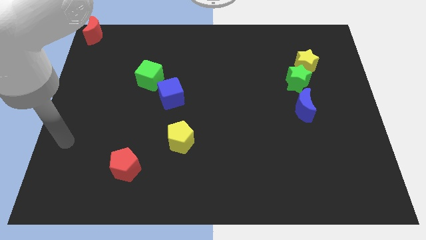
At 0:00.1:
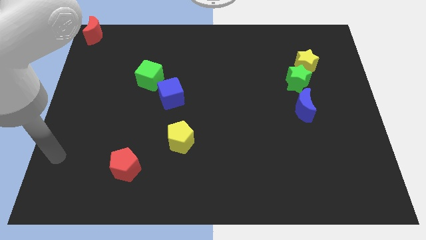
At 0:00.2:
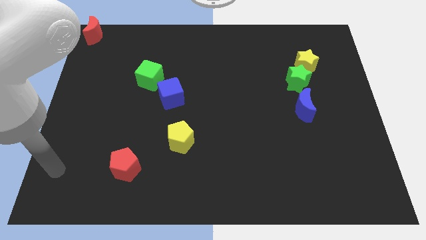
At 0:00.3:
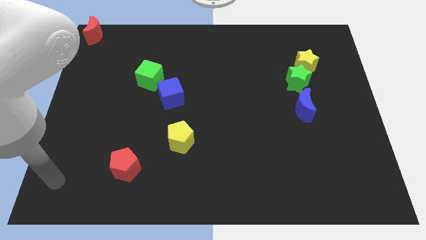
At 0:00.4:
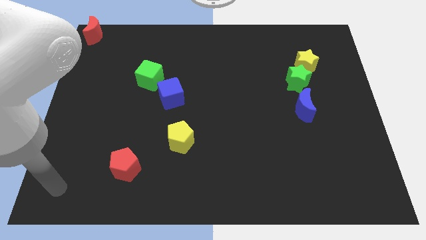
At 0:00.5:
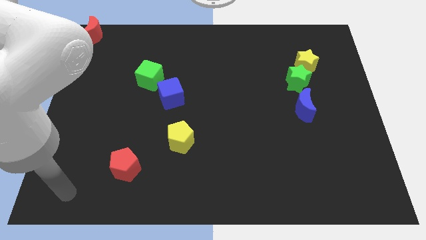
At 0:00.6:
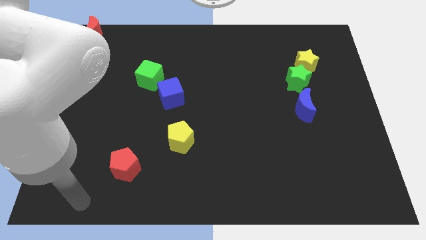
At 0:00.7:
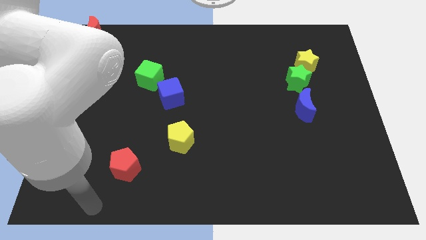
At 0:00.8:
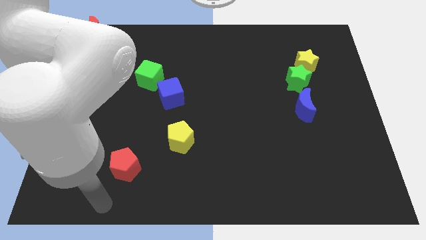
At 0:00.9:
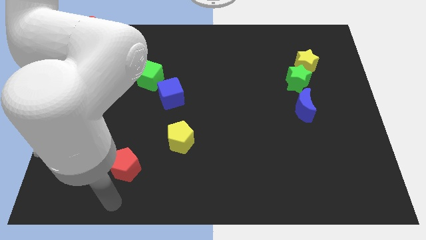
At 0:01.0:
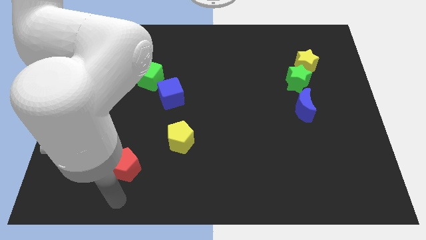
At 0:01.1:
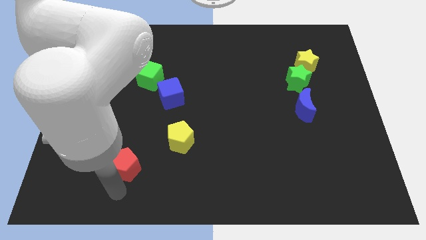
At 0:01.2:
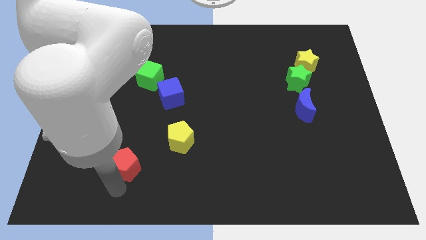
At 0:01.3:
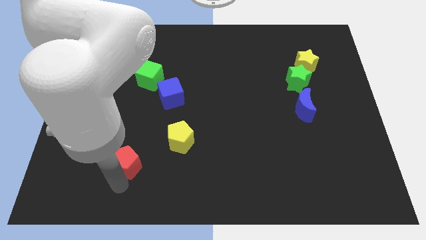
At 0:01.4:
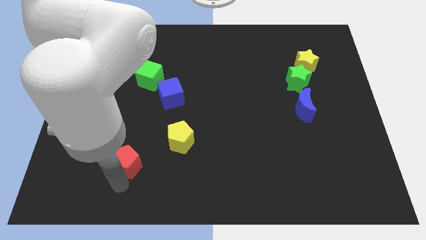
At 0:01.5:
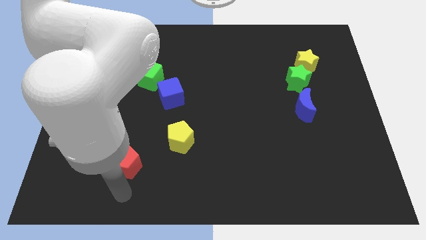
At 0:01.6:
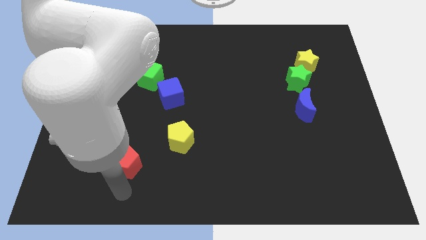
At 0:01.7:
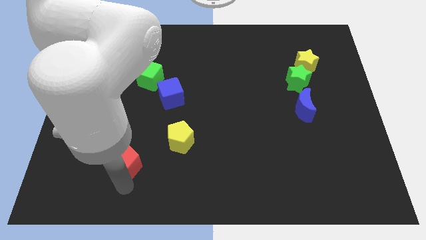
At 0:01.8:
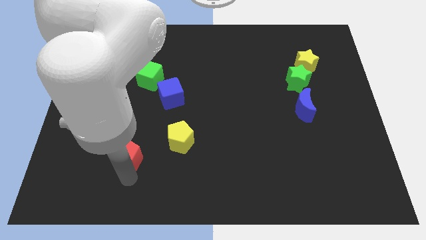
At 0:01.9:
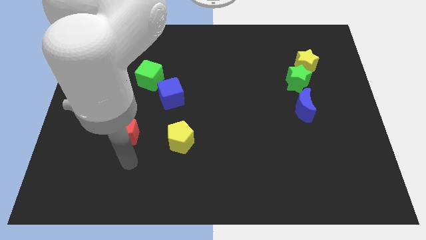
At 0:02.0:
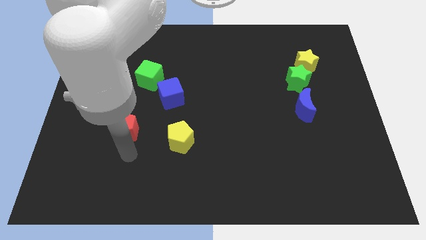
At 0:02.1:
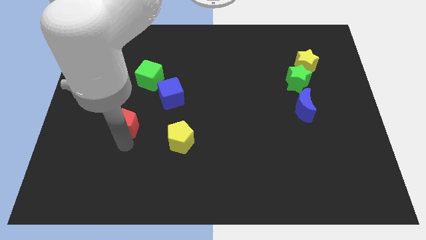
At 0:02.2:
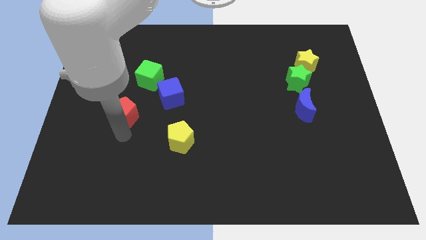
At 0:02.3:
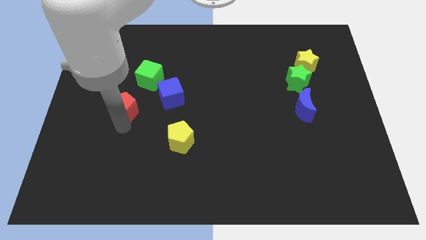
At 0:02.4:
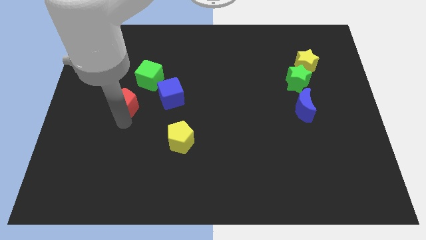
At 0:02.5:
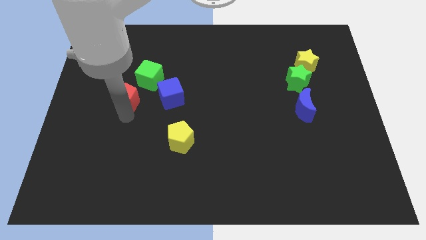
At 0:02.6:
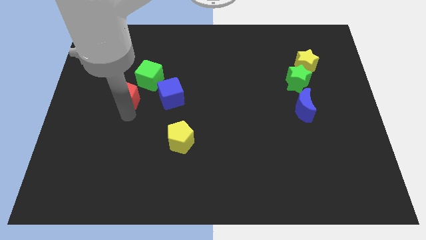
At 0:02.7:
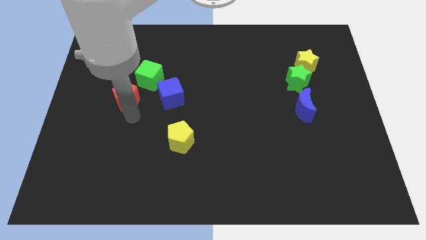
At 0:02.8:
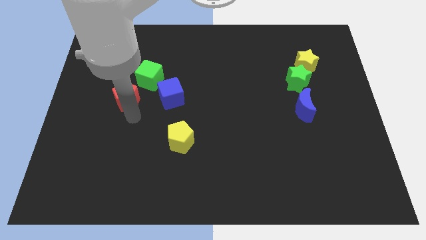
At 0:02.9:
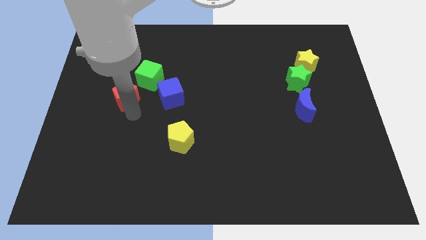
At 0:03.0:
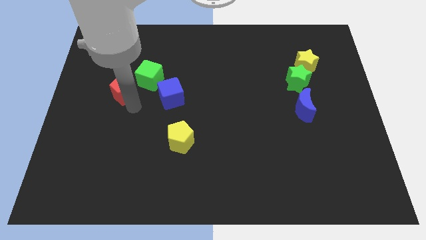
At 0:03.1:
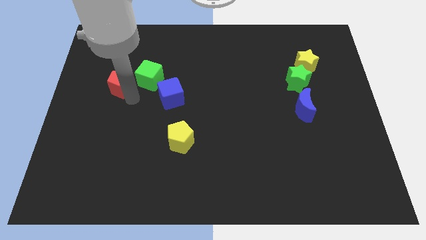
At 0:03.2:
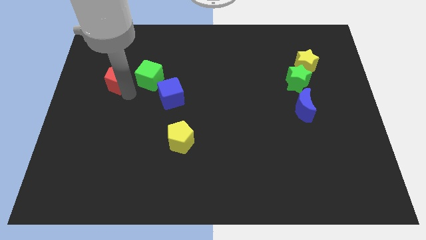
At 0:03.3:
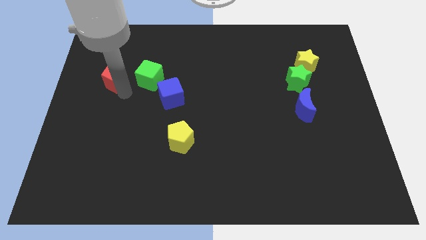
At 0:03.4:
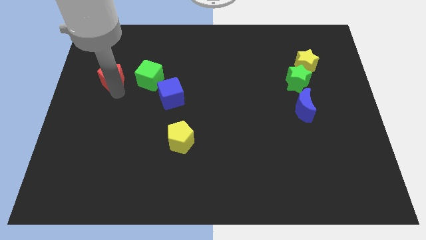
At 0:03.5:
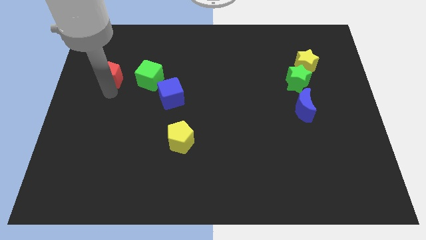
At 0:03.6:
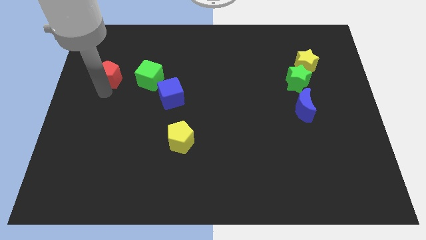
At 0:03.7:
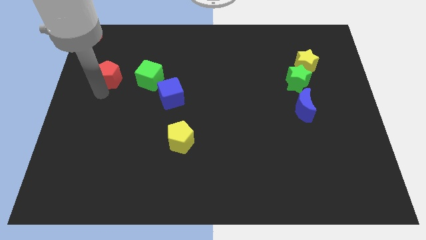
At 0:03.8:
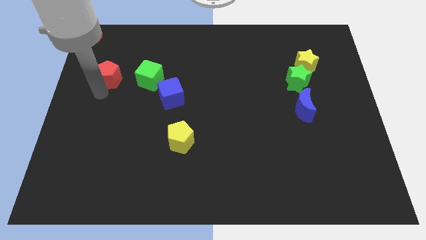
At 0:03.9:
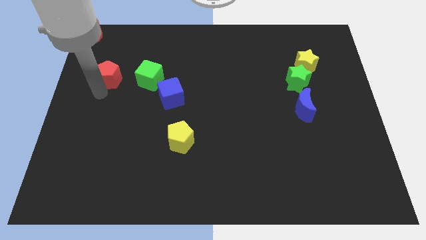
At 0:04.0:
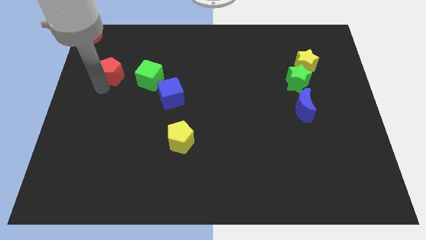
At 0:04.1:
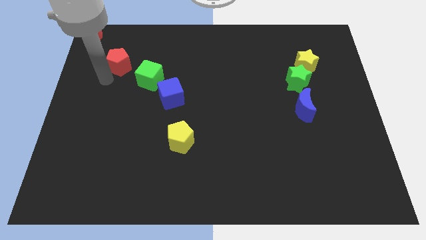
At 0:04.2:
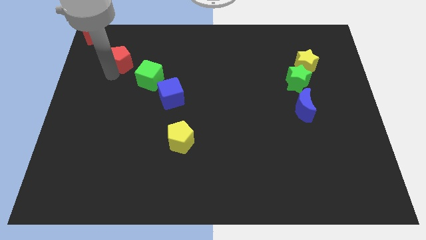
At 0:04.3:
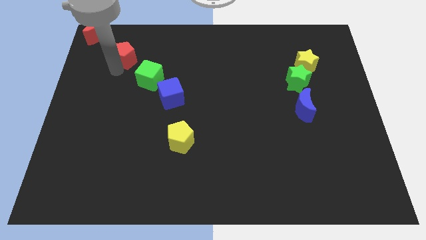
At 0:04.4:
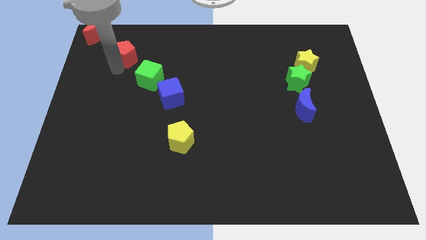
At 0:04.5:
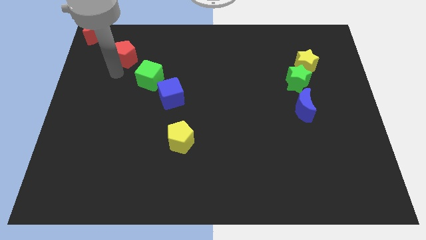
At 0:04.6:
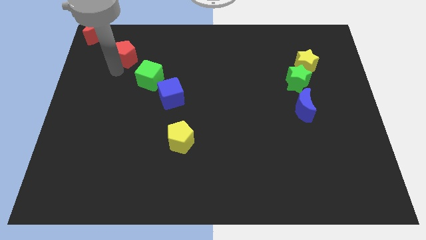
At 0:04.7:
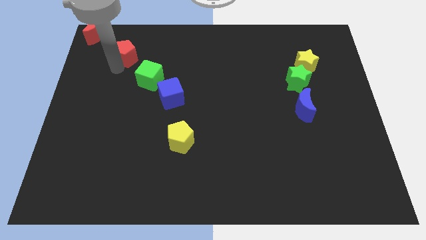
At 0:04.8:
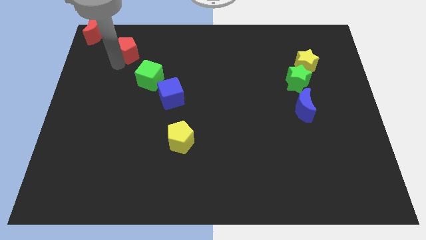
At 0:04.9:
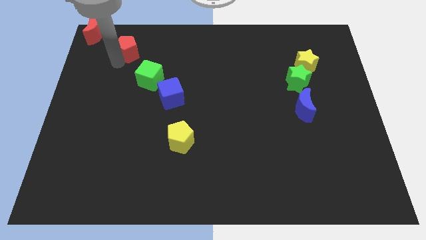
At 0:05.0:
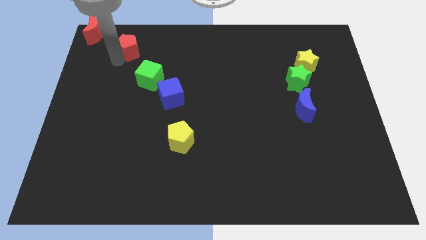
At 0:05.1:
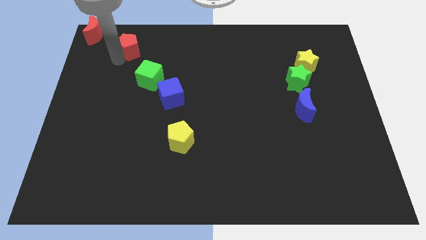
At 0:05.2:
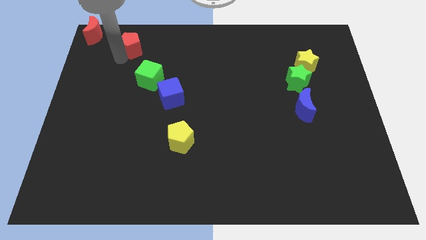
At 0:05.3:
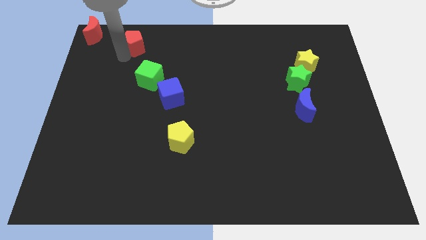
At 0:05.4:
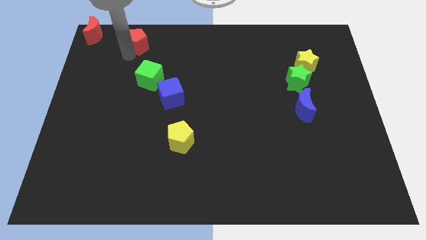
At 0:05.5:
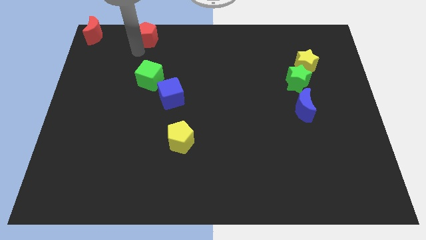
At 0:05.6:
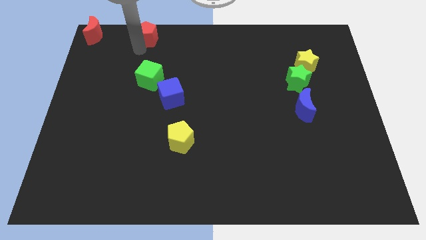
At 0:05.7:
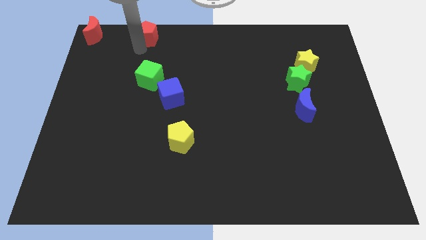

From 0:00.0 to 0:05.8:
move the red pentagon towards the top of the board

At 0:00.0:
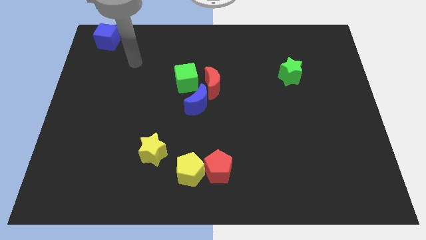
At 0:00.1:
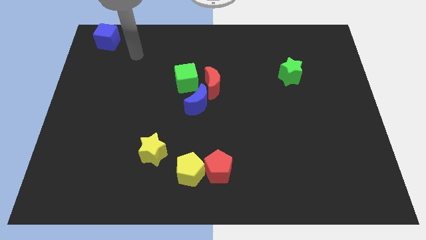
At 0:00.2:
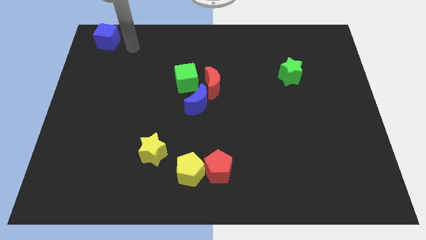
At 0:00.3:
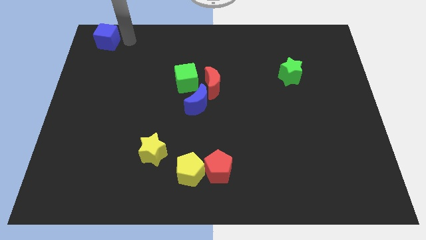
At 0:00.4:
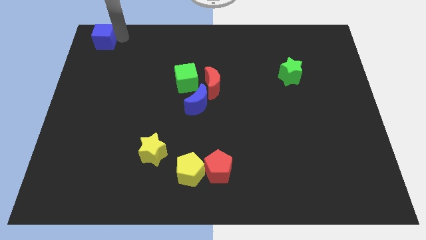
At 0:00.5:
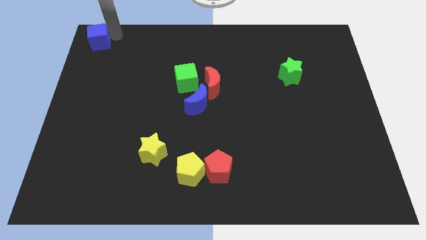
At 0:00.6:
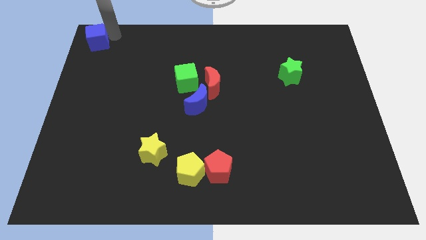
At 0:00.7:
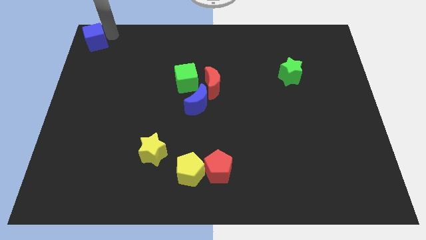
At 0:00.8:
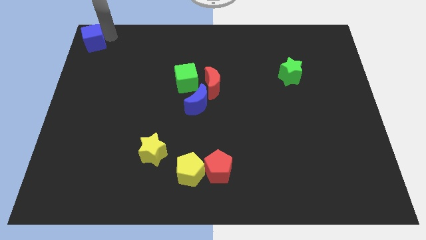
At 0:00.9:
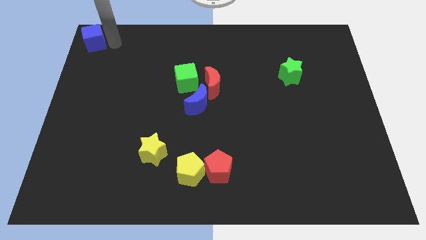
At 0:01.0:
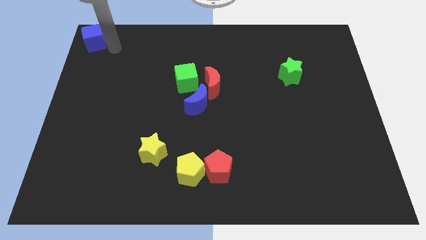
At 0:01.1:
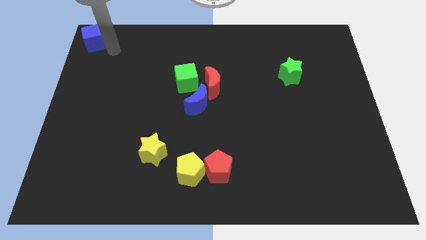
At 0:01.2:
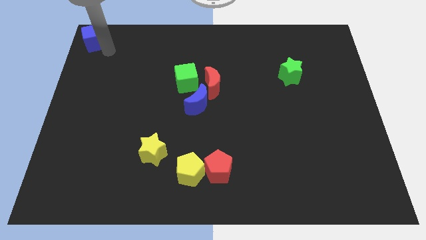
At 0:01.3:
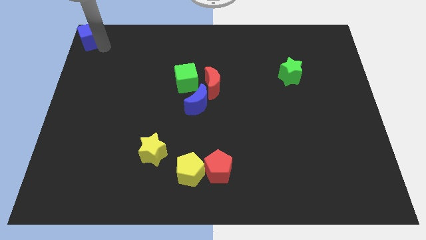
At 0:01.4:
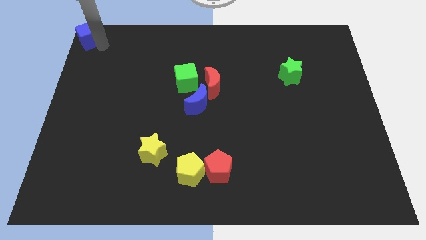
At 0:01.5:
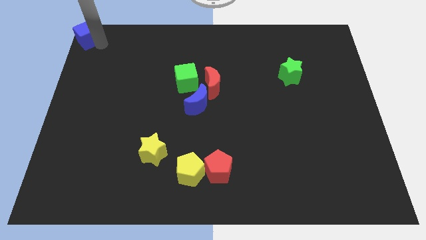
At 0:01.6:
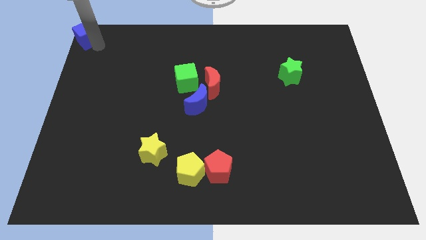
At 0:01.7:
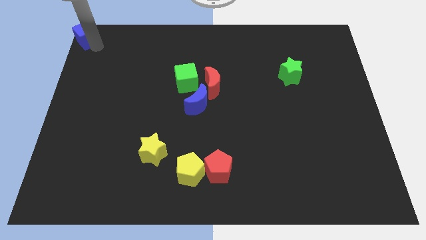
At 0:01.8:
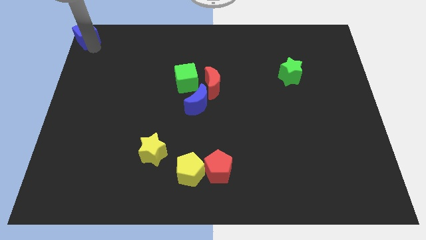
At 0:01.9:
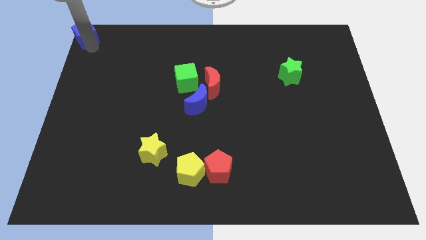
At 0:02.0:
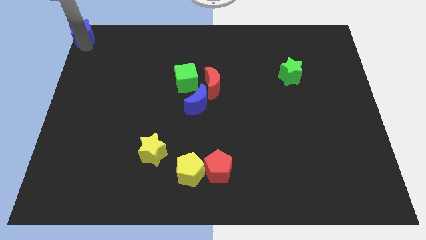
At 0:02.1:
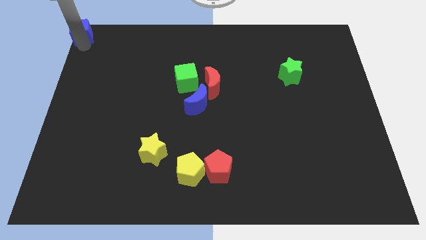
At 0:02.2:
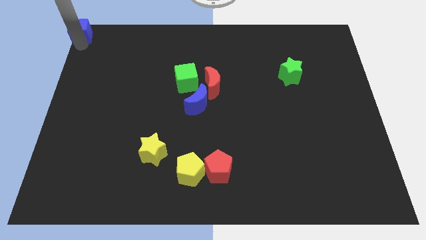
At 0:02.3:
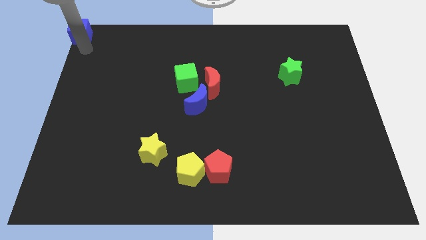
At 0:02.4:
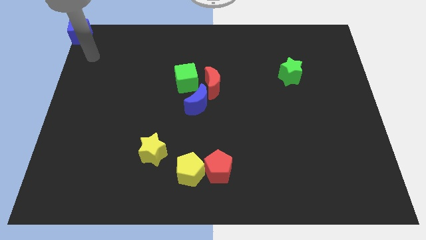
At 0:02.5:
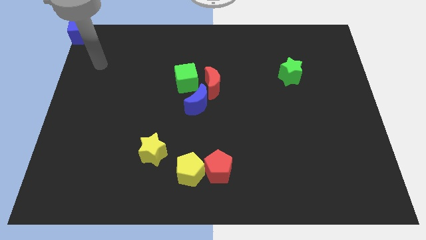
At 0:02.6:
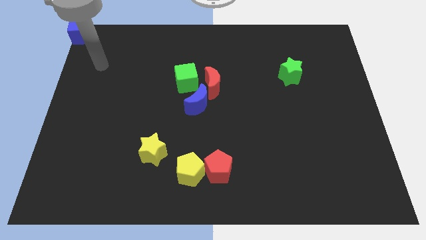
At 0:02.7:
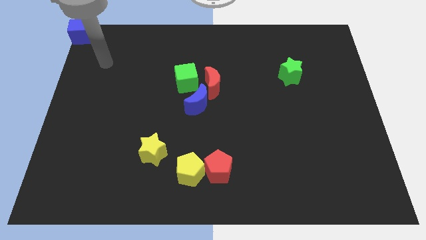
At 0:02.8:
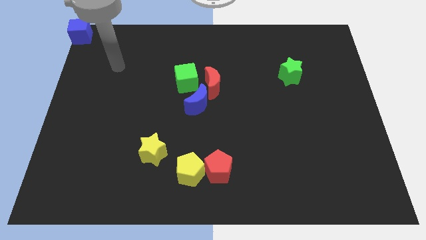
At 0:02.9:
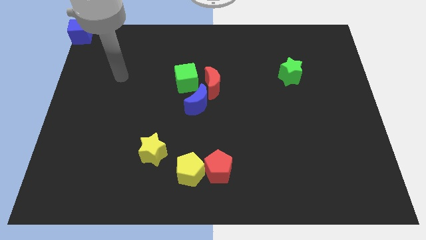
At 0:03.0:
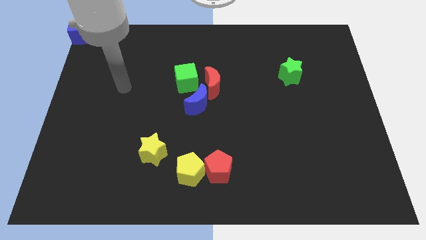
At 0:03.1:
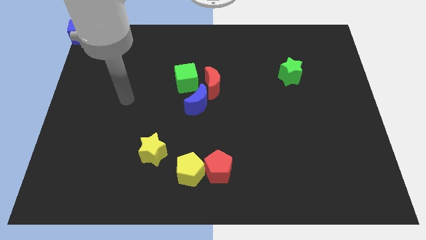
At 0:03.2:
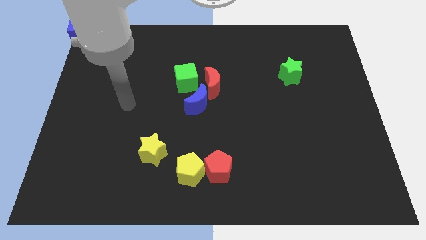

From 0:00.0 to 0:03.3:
push blue cube to the top left corner of the board
